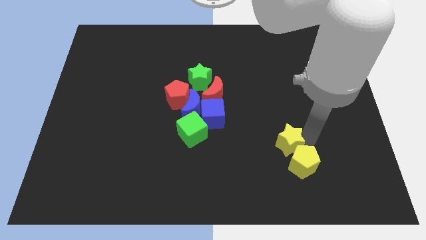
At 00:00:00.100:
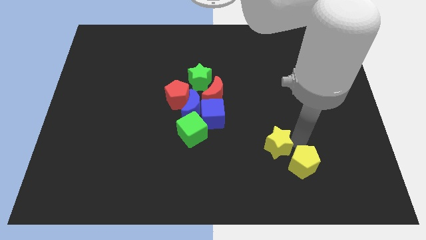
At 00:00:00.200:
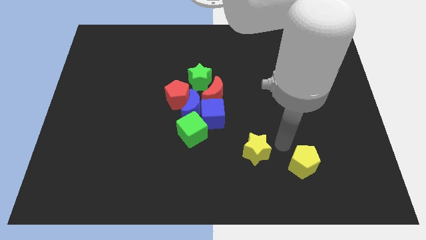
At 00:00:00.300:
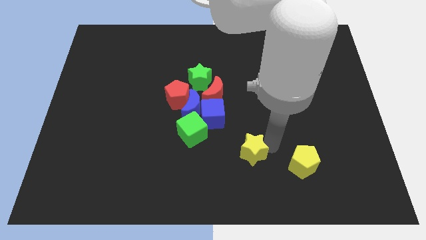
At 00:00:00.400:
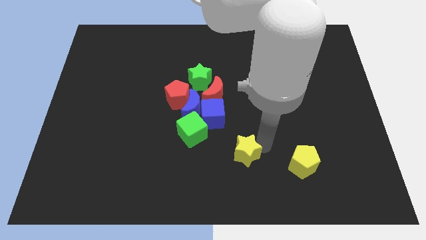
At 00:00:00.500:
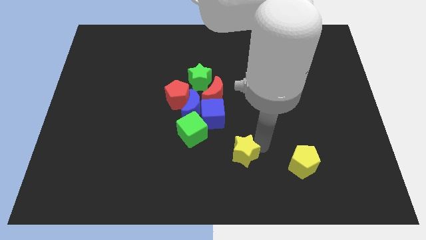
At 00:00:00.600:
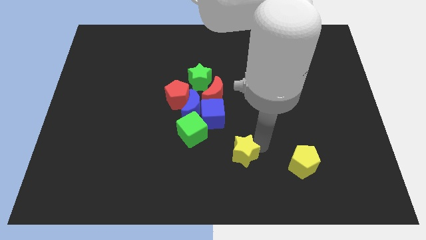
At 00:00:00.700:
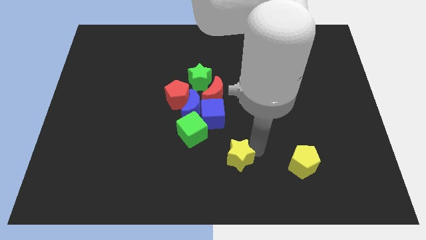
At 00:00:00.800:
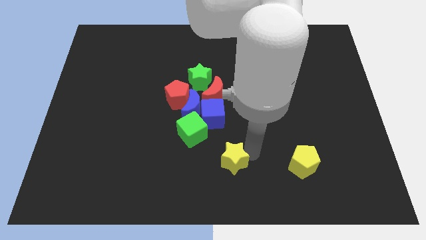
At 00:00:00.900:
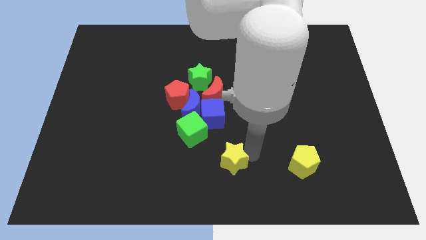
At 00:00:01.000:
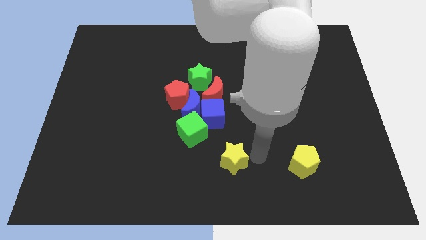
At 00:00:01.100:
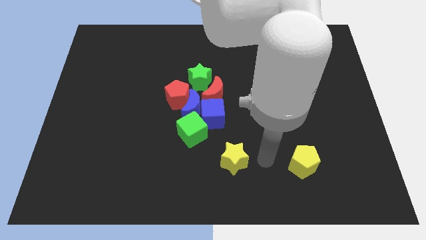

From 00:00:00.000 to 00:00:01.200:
separate yellow star from yellow pentagon

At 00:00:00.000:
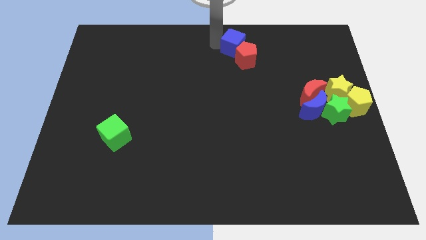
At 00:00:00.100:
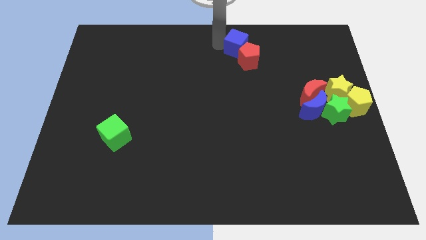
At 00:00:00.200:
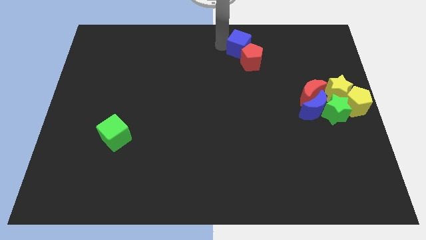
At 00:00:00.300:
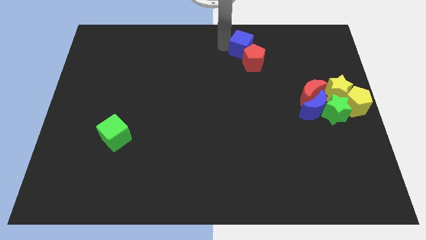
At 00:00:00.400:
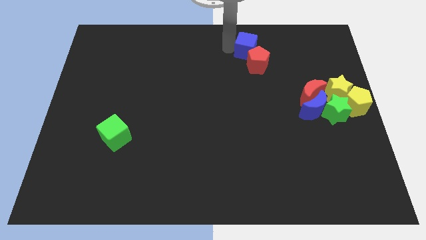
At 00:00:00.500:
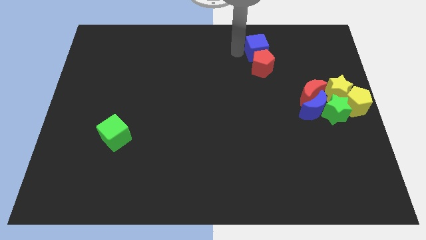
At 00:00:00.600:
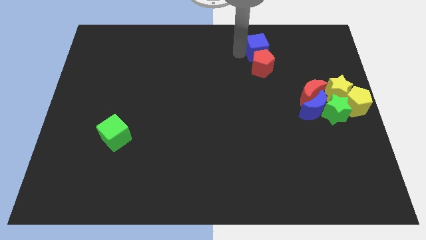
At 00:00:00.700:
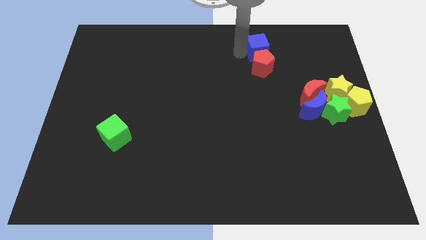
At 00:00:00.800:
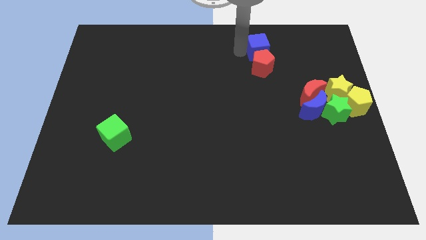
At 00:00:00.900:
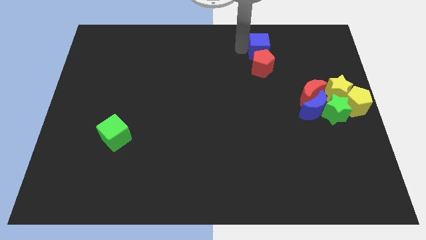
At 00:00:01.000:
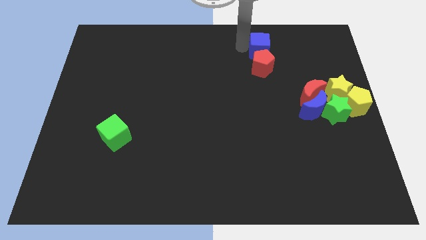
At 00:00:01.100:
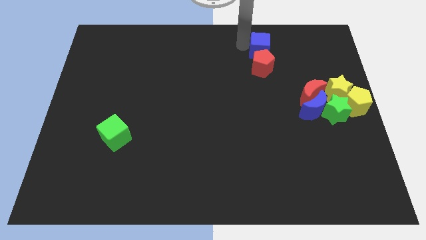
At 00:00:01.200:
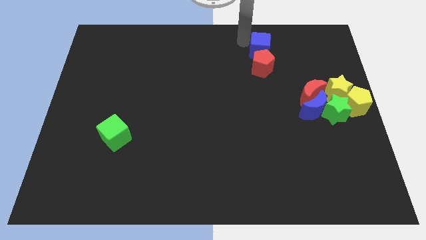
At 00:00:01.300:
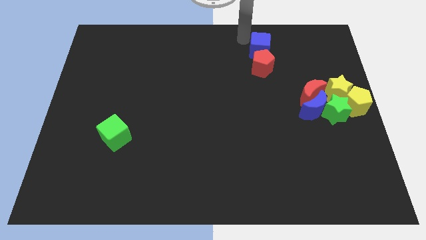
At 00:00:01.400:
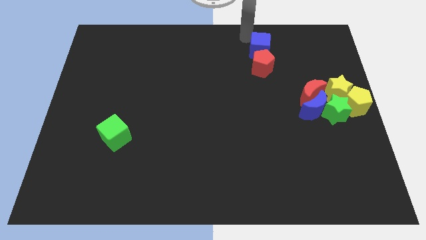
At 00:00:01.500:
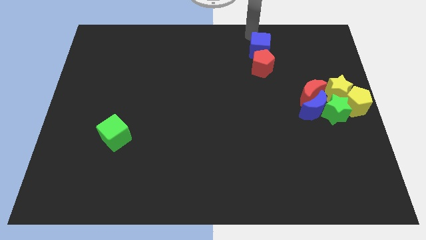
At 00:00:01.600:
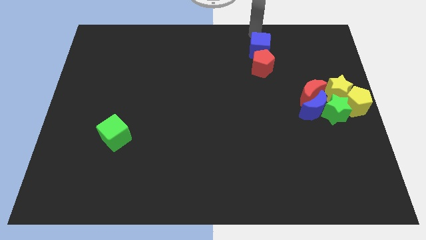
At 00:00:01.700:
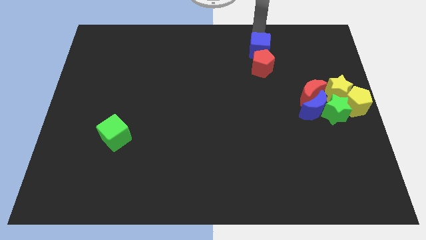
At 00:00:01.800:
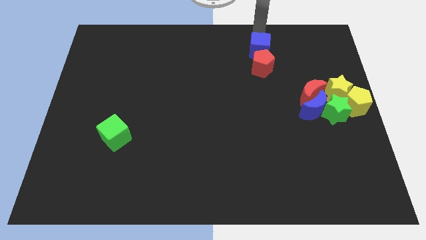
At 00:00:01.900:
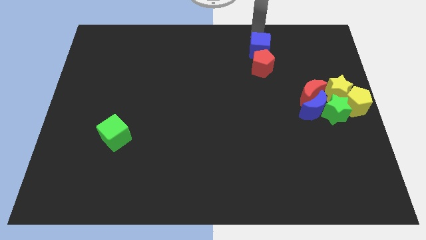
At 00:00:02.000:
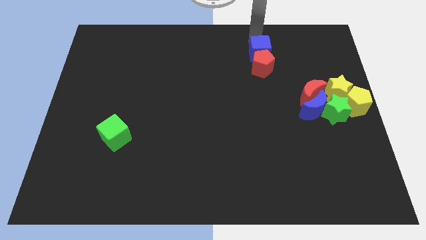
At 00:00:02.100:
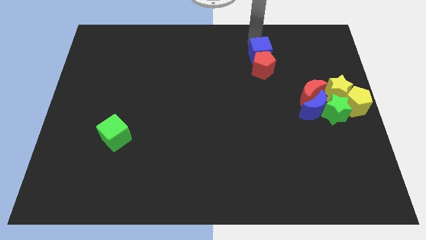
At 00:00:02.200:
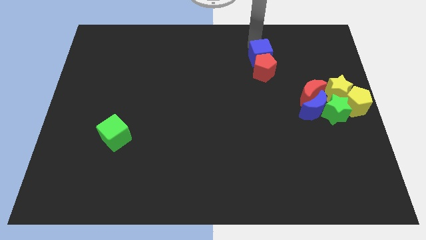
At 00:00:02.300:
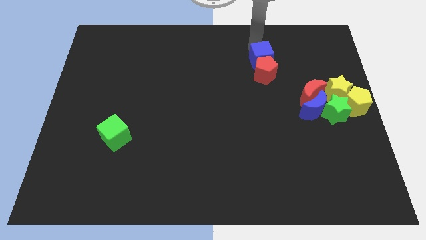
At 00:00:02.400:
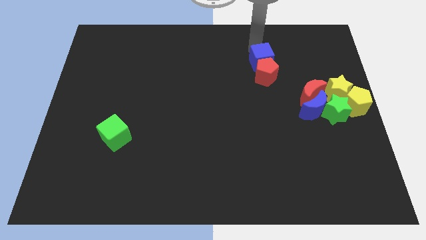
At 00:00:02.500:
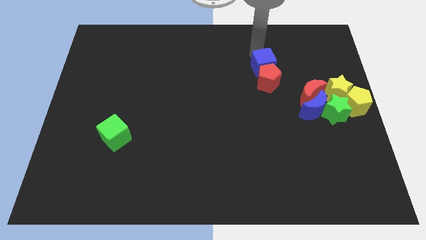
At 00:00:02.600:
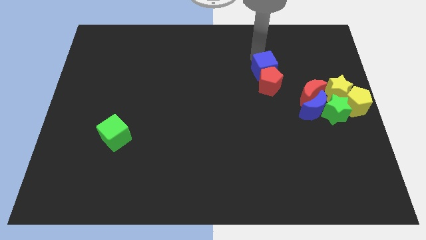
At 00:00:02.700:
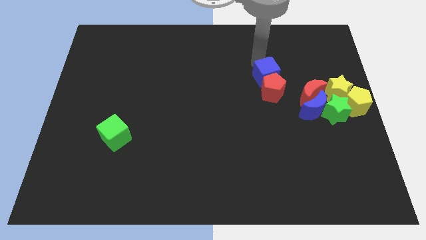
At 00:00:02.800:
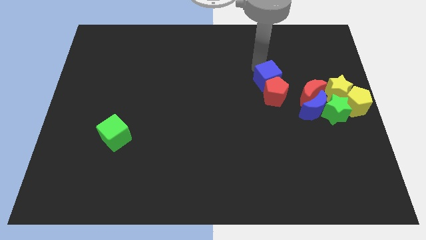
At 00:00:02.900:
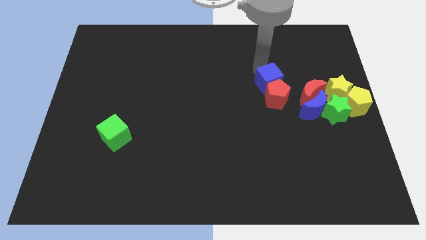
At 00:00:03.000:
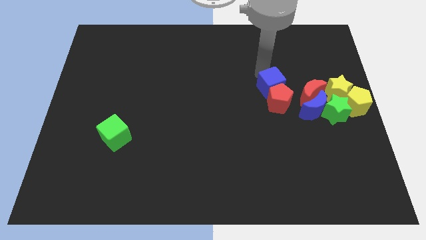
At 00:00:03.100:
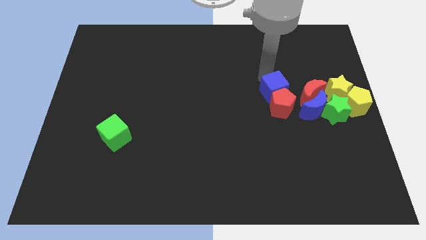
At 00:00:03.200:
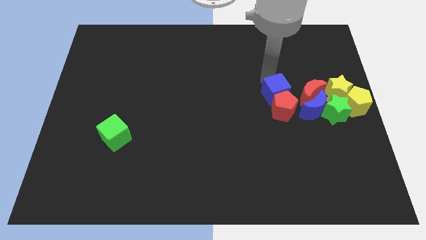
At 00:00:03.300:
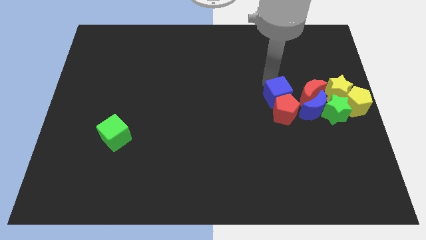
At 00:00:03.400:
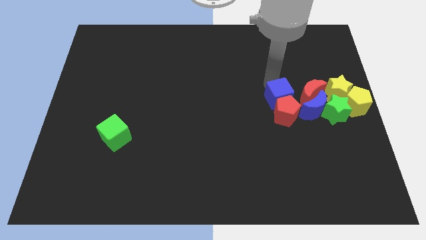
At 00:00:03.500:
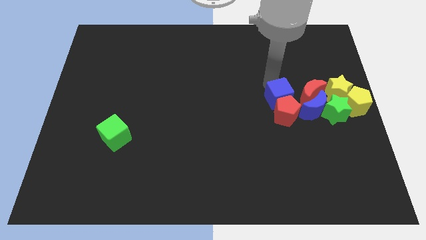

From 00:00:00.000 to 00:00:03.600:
place the blue cube and red pentagon to the left center of board

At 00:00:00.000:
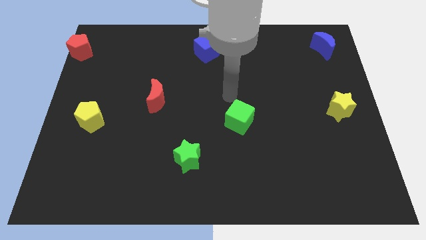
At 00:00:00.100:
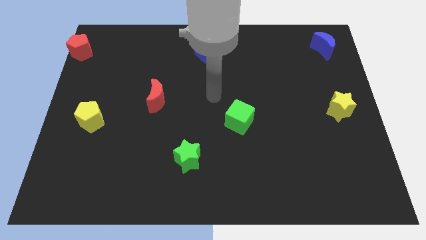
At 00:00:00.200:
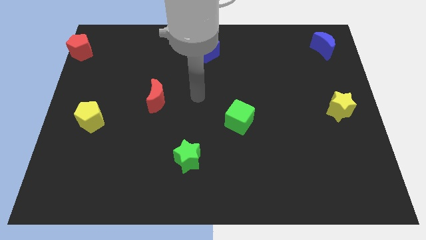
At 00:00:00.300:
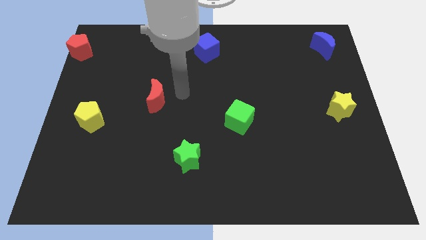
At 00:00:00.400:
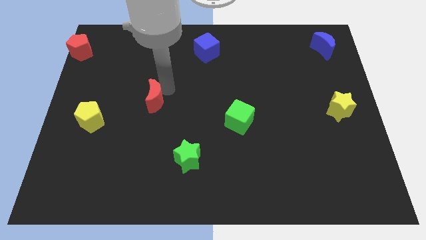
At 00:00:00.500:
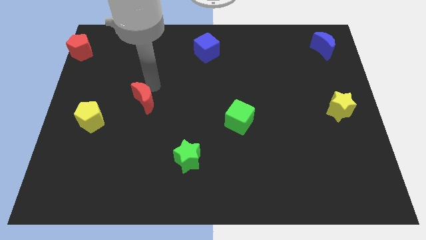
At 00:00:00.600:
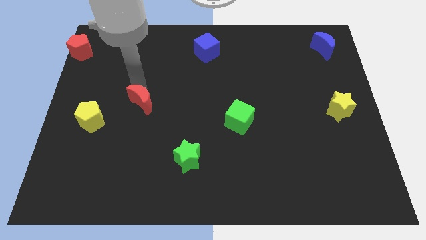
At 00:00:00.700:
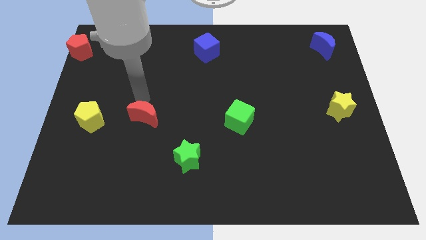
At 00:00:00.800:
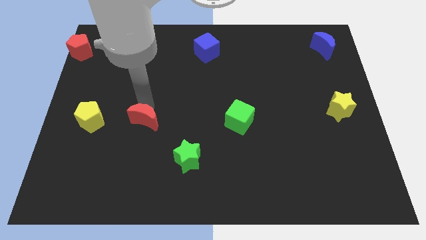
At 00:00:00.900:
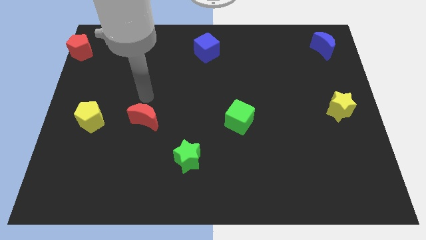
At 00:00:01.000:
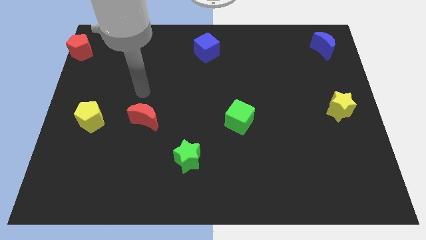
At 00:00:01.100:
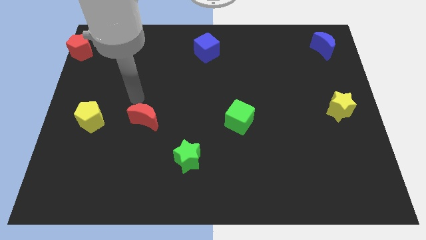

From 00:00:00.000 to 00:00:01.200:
move the red crescent right to the yellow pentagon

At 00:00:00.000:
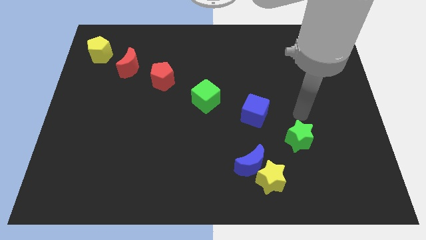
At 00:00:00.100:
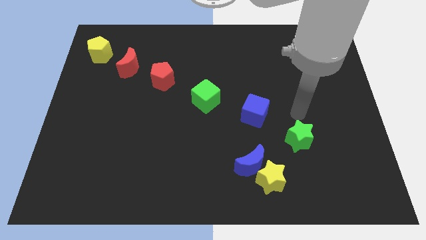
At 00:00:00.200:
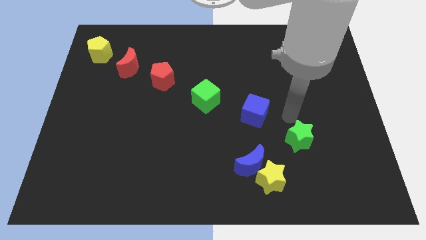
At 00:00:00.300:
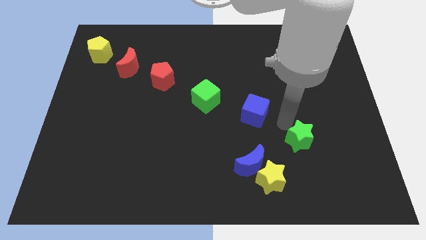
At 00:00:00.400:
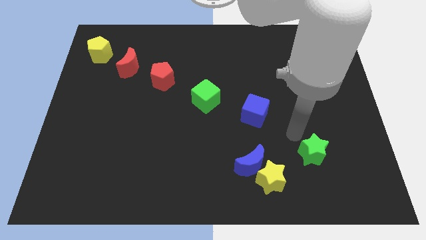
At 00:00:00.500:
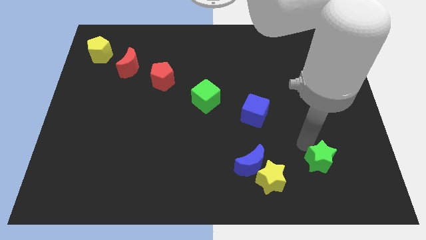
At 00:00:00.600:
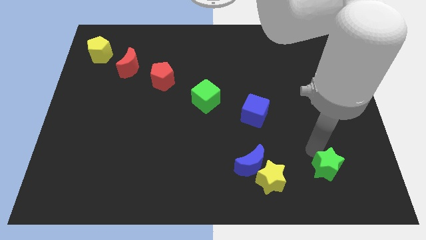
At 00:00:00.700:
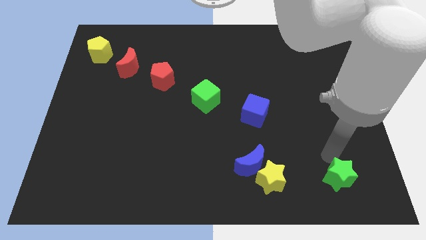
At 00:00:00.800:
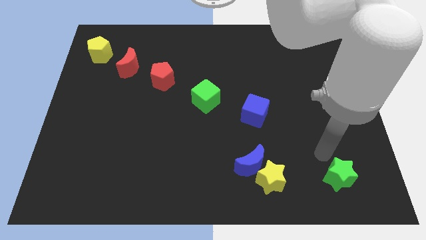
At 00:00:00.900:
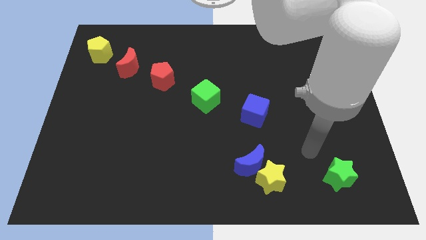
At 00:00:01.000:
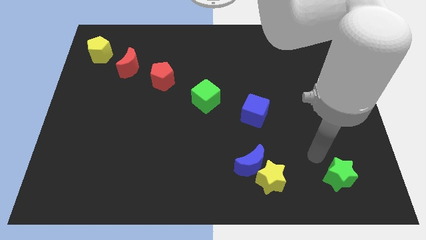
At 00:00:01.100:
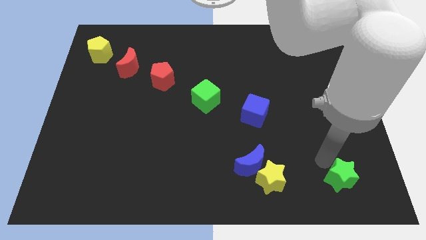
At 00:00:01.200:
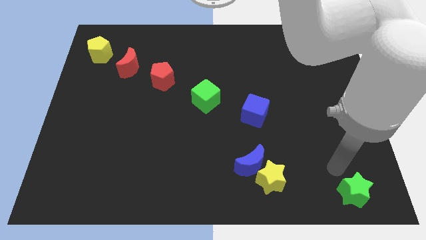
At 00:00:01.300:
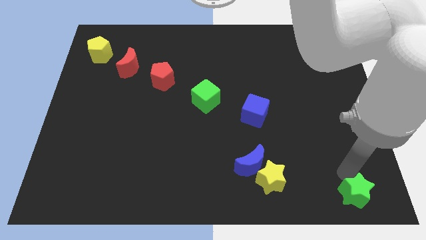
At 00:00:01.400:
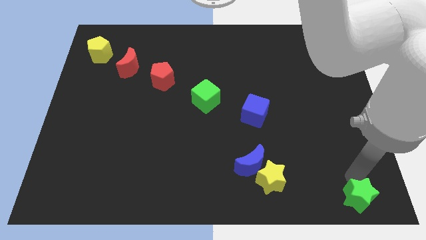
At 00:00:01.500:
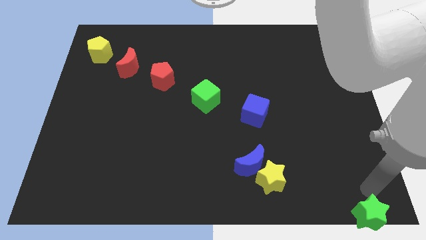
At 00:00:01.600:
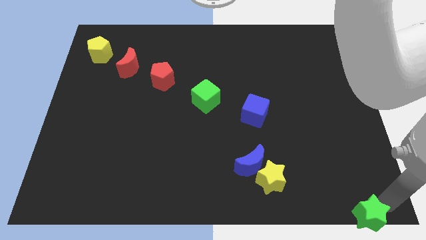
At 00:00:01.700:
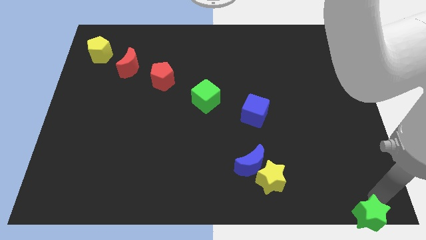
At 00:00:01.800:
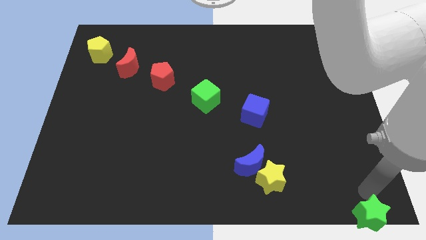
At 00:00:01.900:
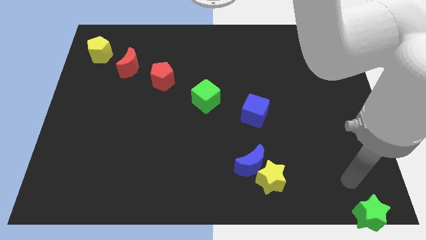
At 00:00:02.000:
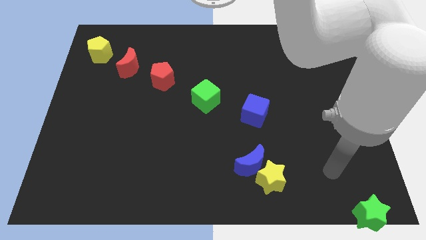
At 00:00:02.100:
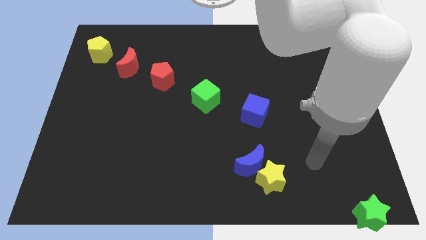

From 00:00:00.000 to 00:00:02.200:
push green star towards bottom right edge of the board

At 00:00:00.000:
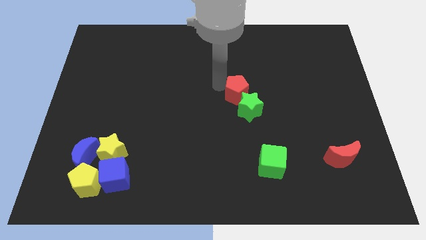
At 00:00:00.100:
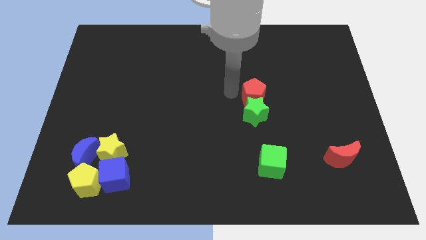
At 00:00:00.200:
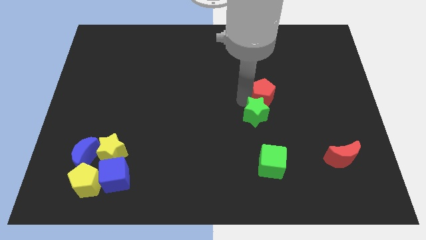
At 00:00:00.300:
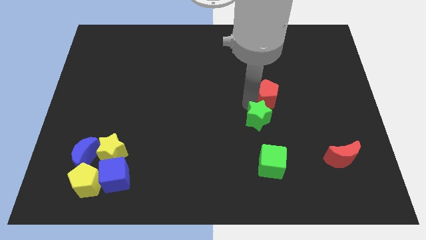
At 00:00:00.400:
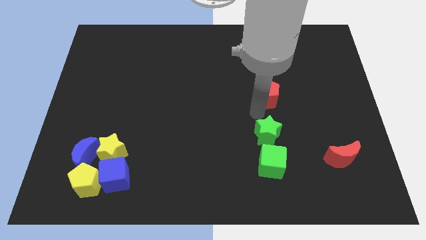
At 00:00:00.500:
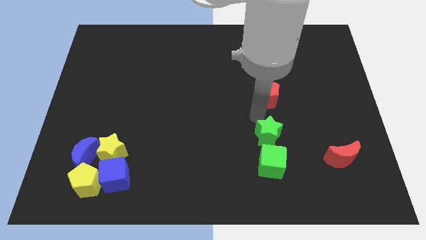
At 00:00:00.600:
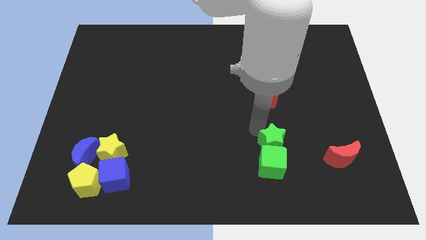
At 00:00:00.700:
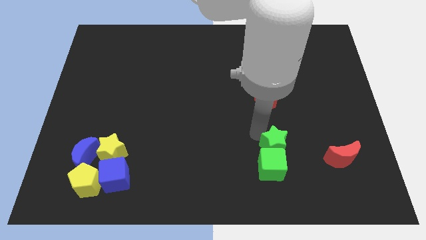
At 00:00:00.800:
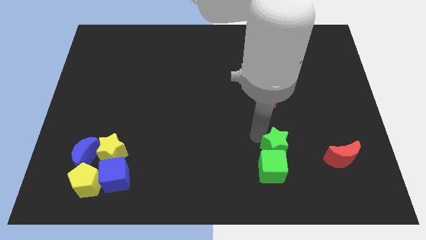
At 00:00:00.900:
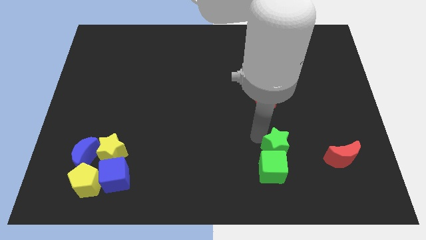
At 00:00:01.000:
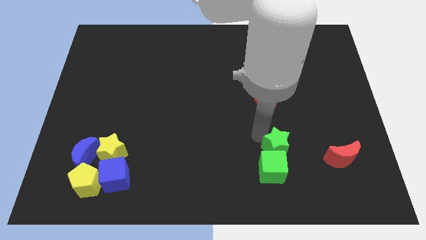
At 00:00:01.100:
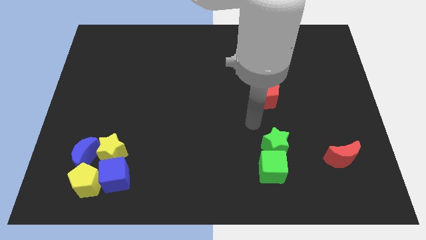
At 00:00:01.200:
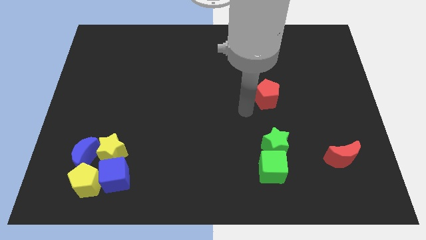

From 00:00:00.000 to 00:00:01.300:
move green star into the green cube
